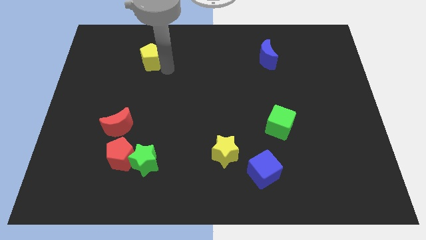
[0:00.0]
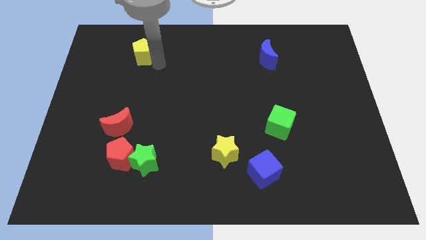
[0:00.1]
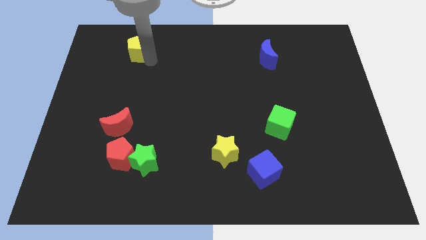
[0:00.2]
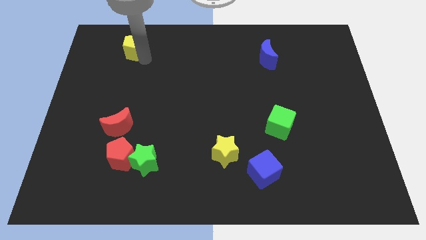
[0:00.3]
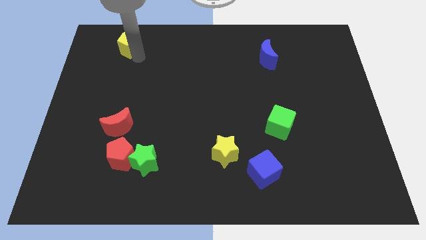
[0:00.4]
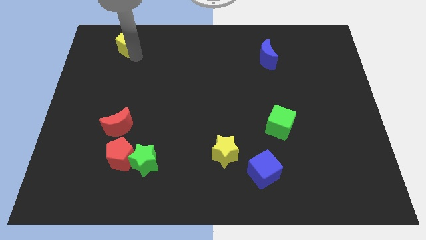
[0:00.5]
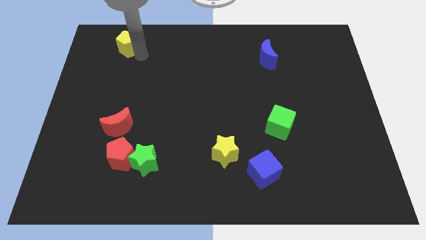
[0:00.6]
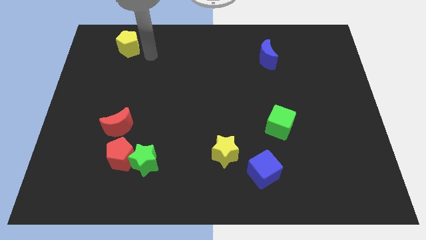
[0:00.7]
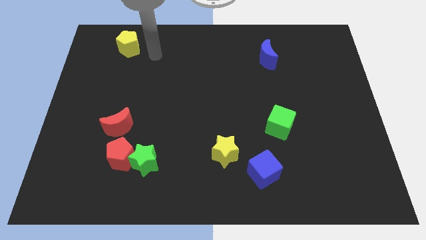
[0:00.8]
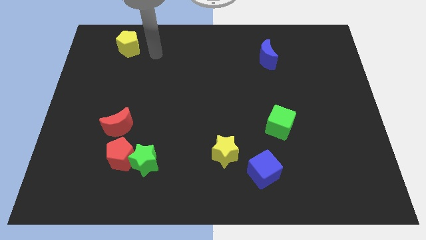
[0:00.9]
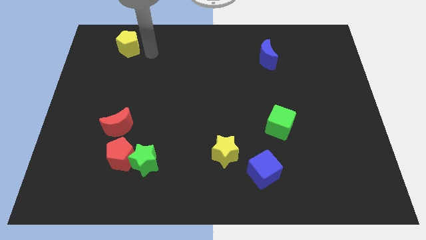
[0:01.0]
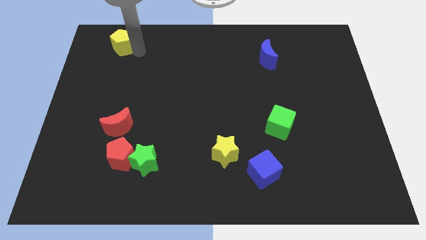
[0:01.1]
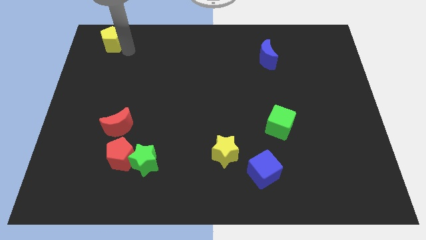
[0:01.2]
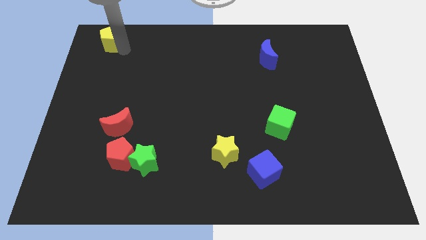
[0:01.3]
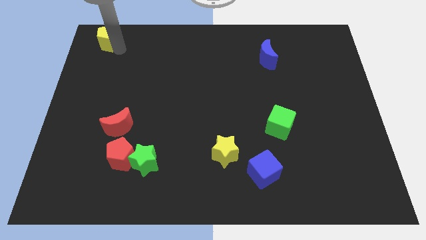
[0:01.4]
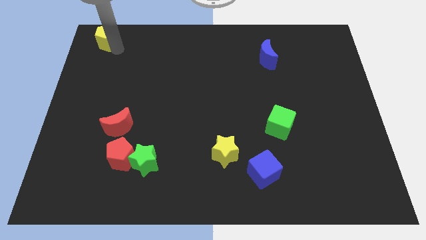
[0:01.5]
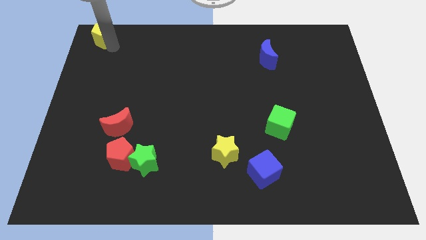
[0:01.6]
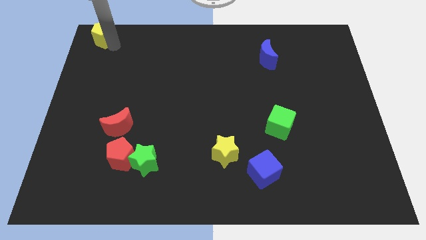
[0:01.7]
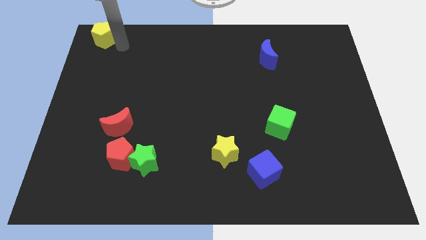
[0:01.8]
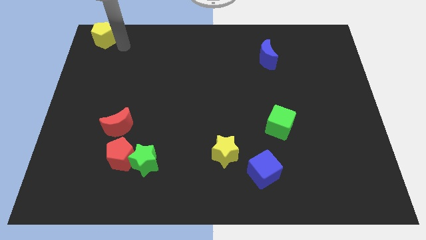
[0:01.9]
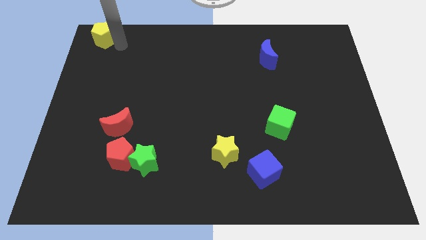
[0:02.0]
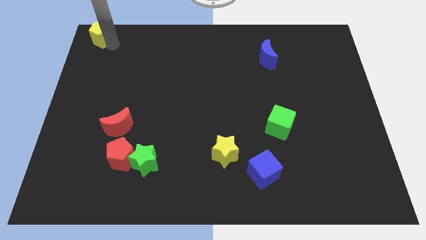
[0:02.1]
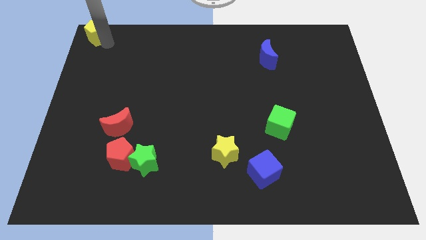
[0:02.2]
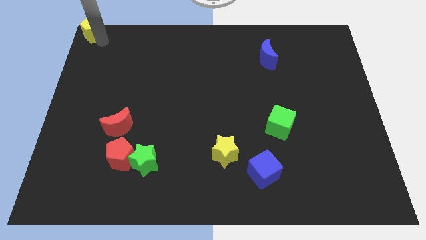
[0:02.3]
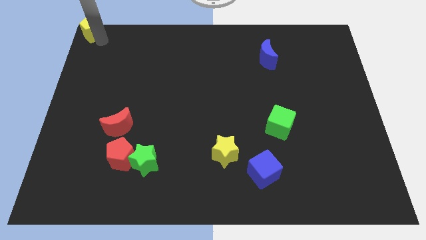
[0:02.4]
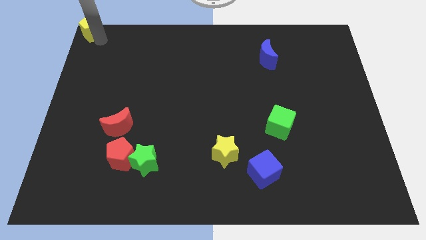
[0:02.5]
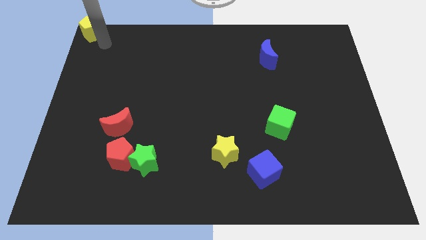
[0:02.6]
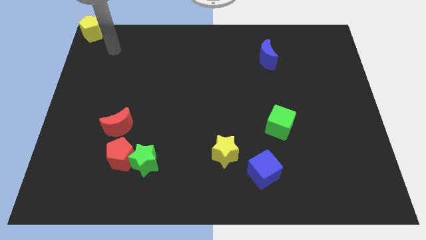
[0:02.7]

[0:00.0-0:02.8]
slide the yellow pentagon to the top left corner

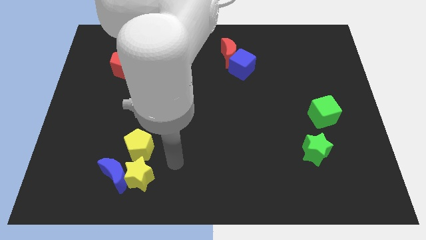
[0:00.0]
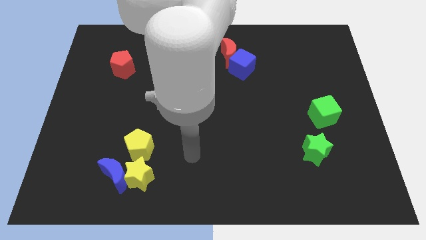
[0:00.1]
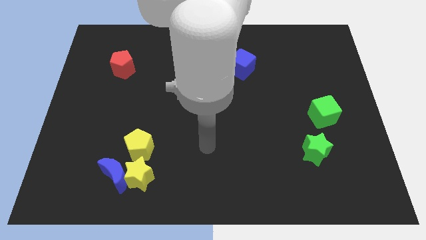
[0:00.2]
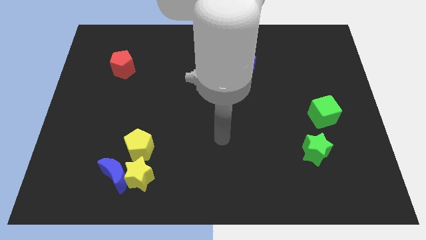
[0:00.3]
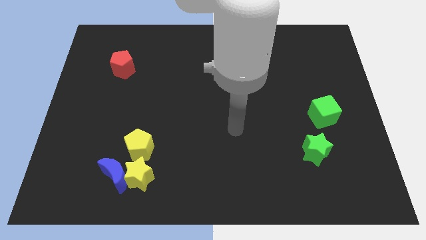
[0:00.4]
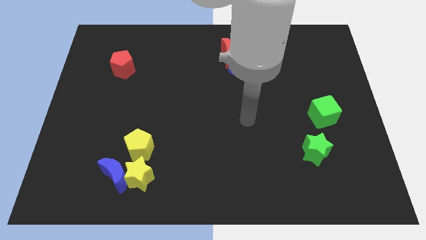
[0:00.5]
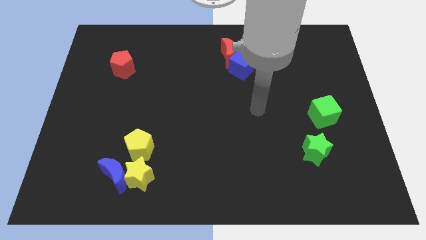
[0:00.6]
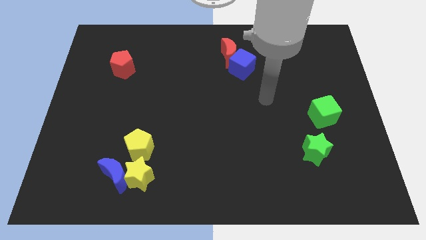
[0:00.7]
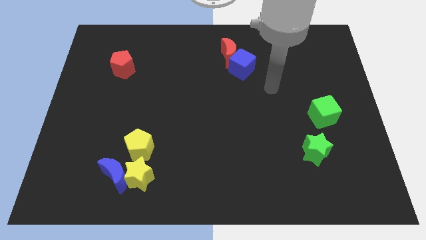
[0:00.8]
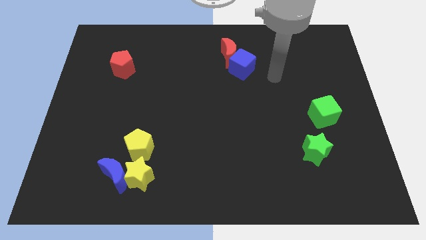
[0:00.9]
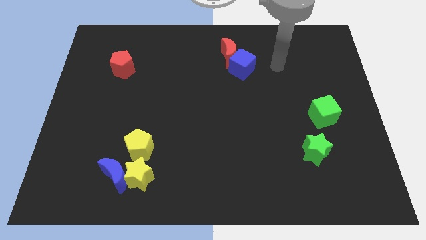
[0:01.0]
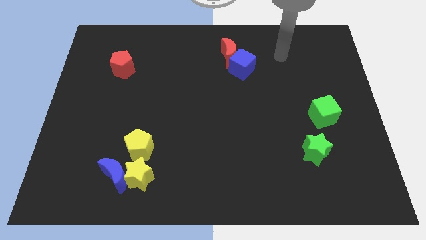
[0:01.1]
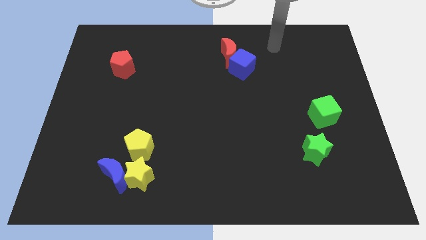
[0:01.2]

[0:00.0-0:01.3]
move your arm towards the top side of the board

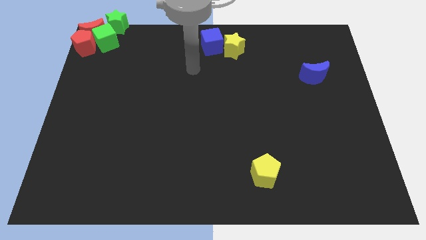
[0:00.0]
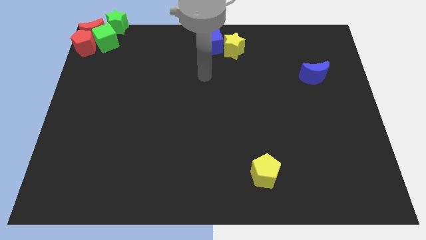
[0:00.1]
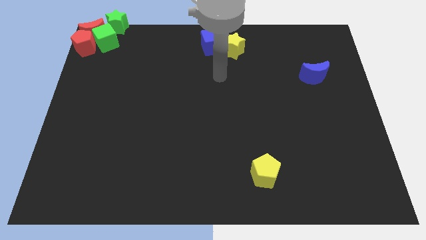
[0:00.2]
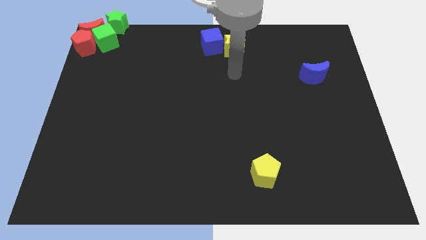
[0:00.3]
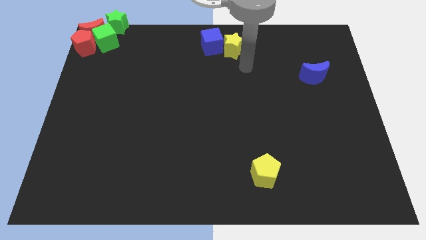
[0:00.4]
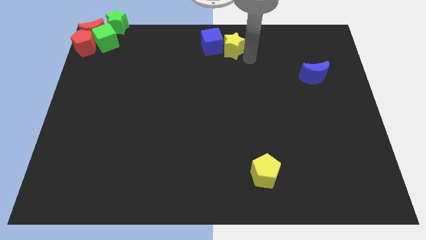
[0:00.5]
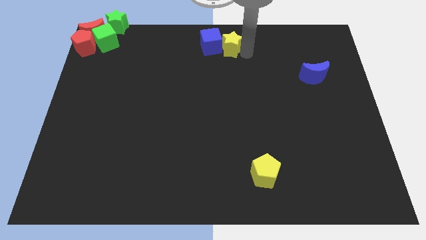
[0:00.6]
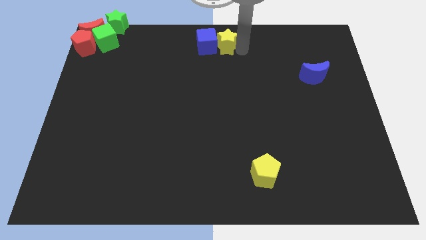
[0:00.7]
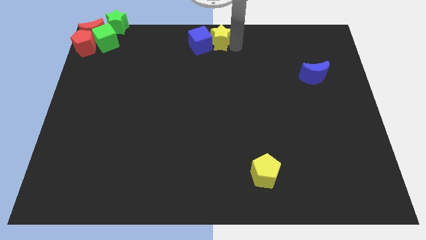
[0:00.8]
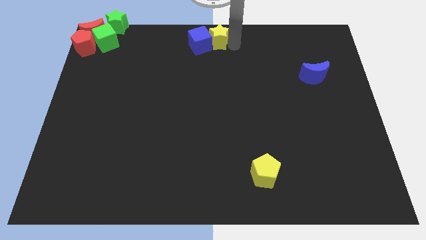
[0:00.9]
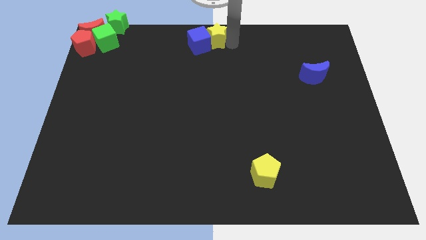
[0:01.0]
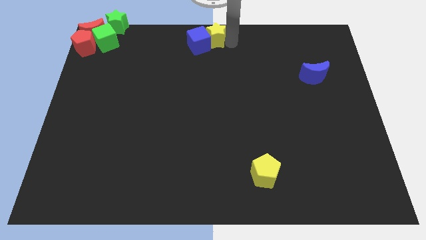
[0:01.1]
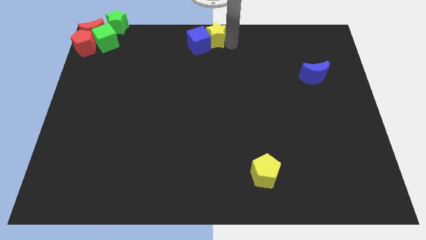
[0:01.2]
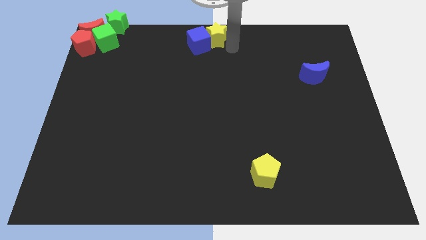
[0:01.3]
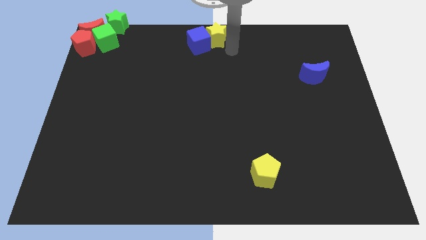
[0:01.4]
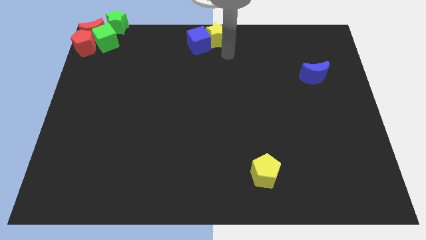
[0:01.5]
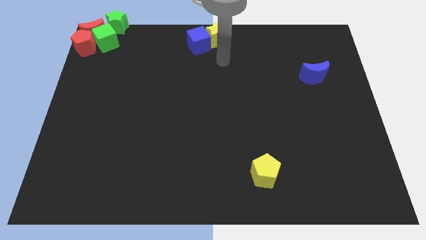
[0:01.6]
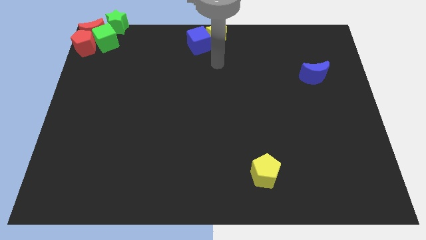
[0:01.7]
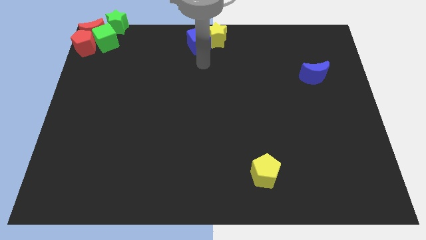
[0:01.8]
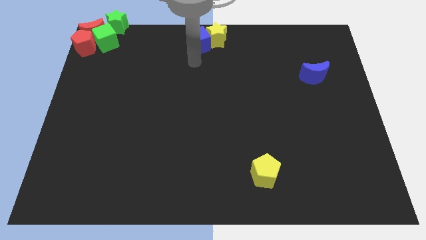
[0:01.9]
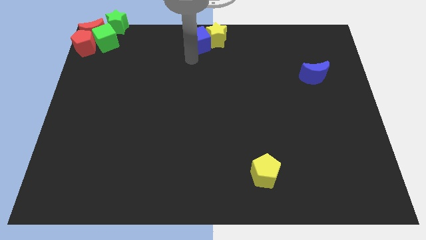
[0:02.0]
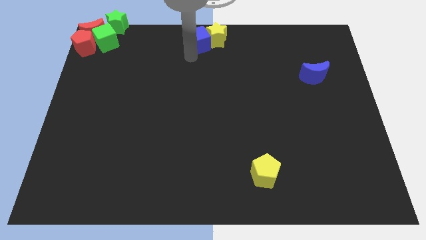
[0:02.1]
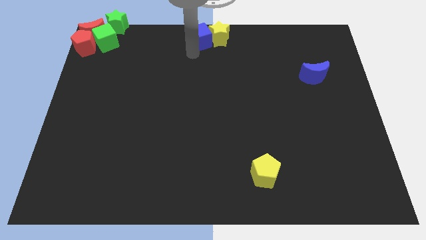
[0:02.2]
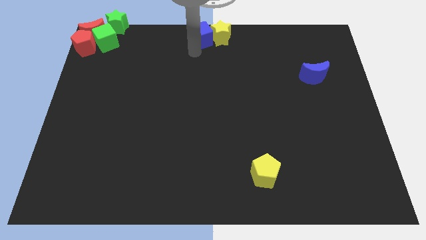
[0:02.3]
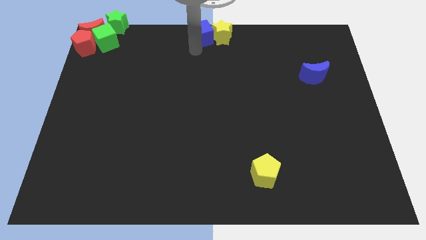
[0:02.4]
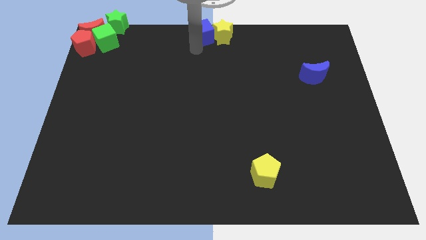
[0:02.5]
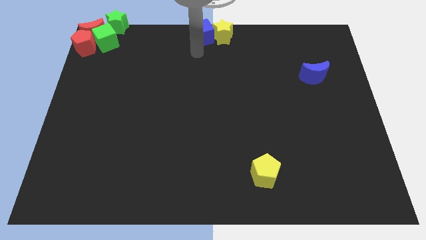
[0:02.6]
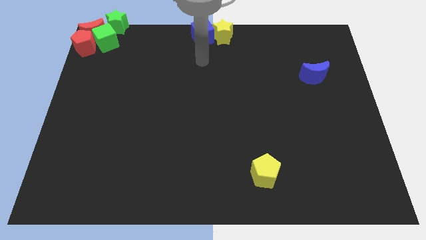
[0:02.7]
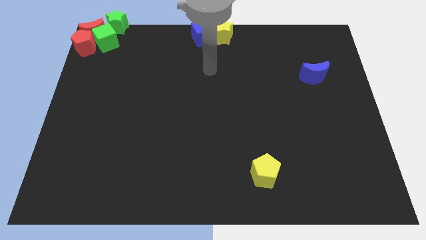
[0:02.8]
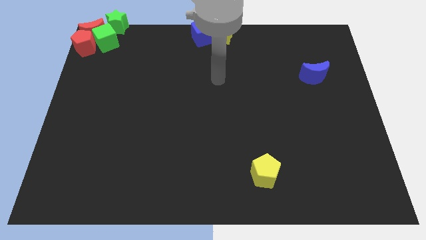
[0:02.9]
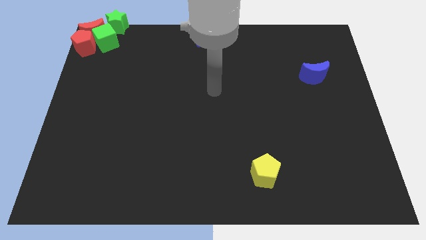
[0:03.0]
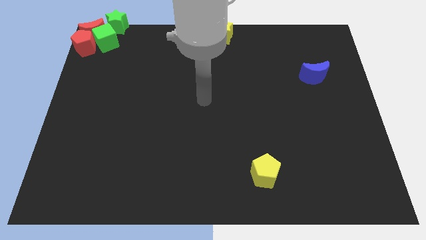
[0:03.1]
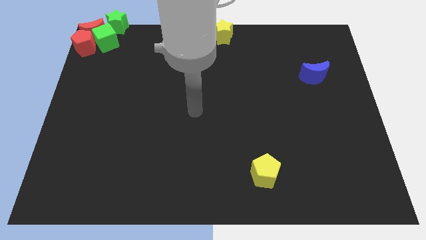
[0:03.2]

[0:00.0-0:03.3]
put the blue cube and the yellow star parallel to the group of blocks

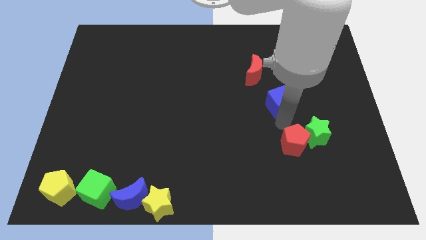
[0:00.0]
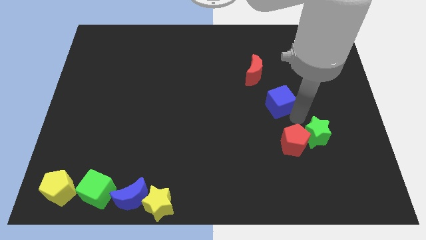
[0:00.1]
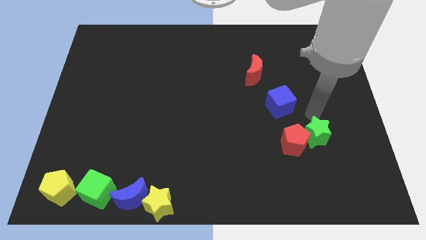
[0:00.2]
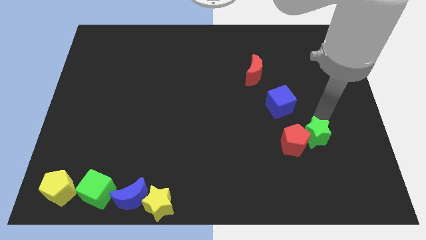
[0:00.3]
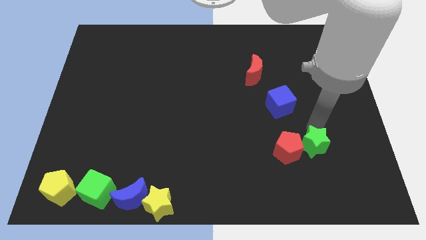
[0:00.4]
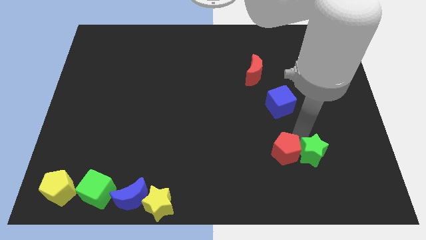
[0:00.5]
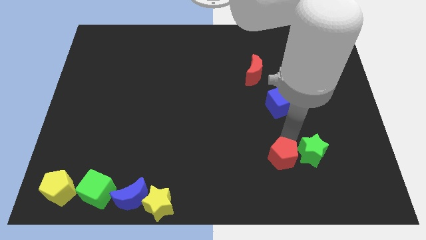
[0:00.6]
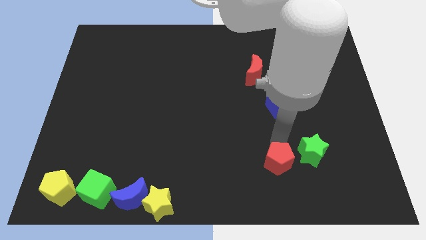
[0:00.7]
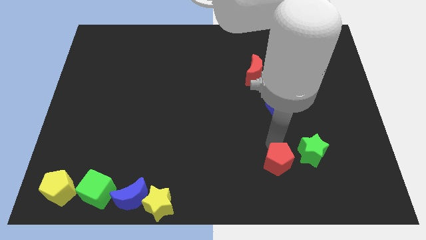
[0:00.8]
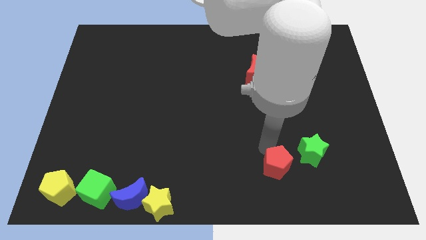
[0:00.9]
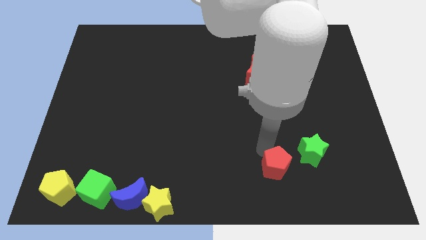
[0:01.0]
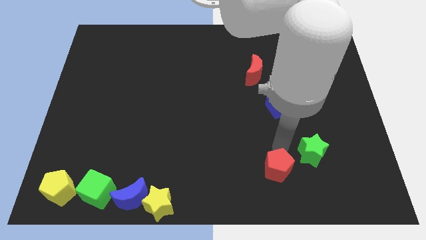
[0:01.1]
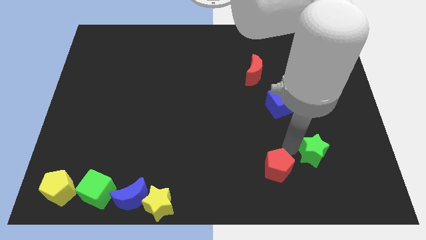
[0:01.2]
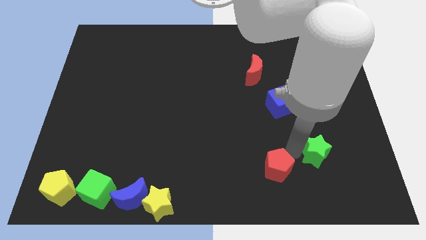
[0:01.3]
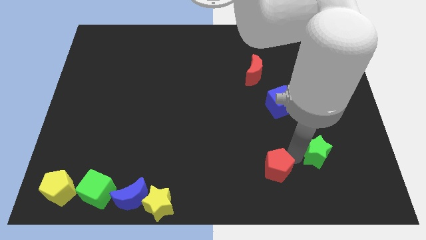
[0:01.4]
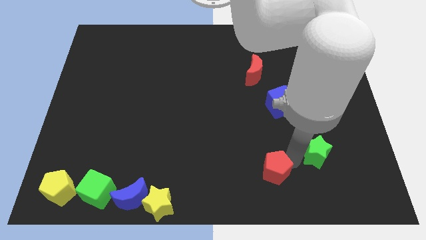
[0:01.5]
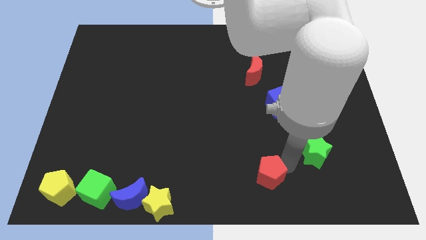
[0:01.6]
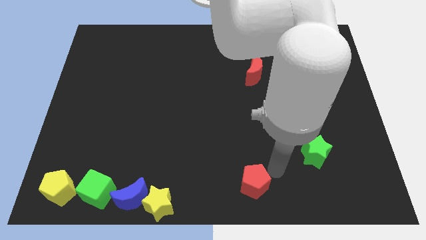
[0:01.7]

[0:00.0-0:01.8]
move red pentagon to the left of green star
